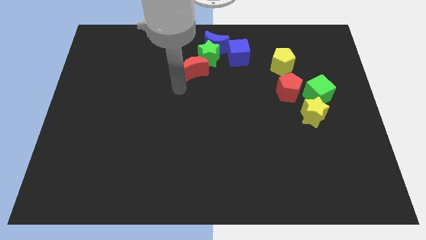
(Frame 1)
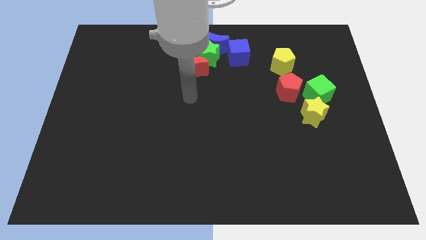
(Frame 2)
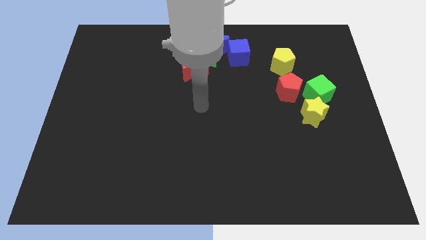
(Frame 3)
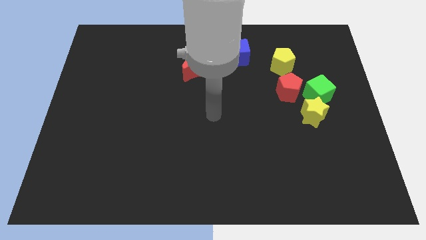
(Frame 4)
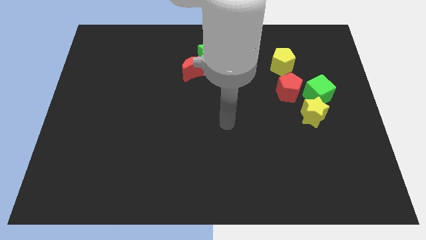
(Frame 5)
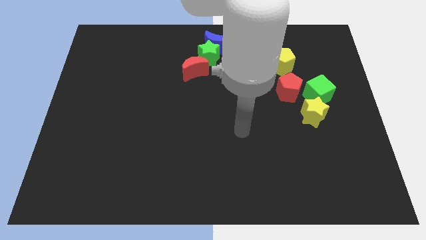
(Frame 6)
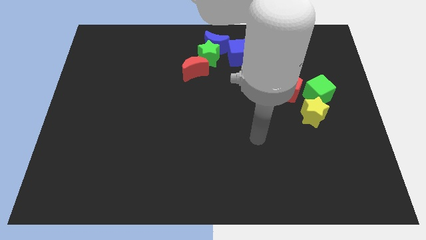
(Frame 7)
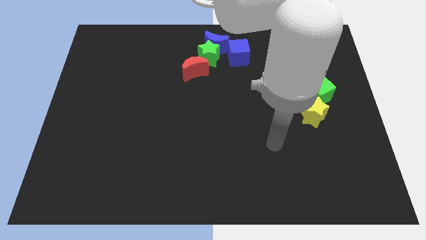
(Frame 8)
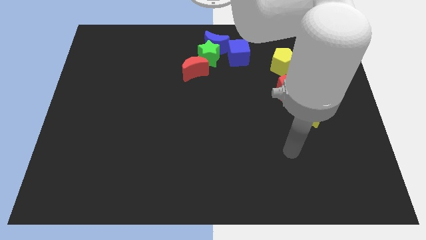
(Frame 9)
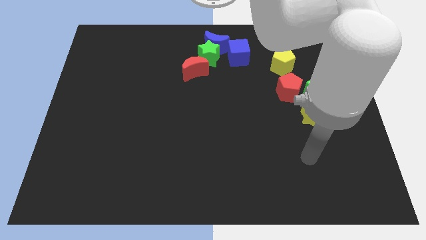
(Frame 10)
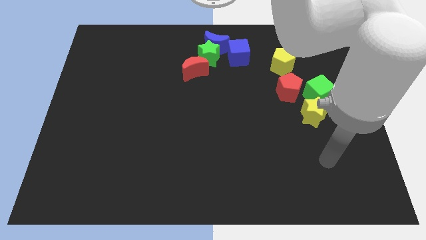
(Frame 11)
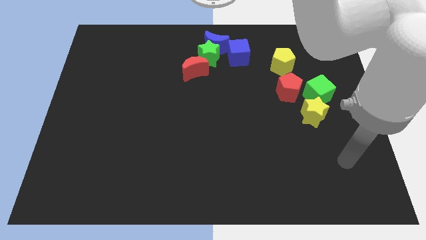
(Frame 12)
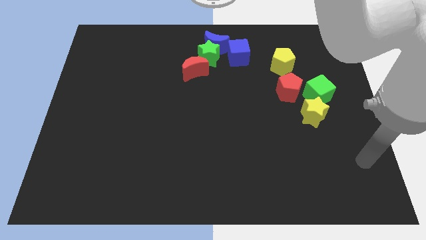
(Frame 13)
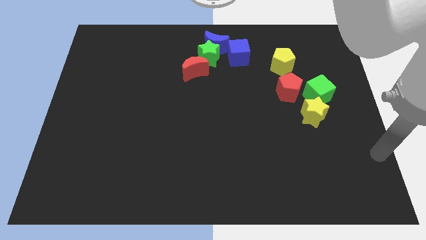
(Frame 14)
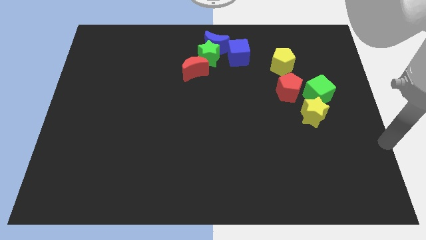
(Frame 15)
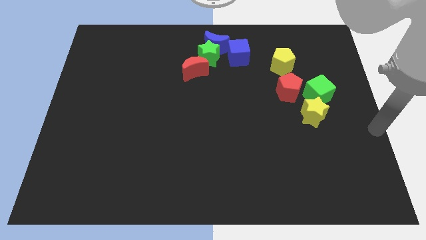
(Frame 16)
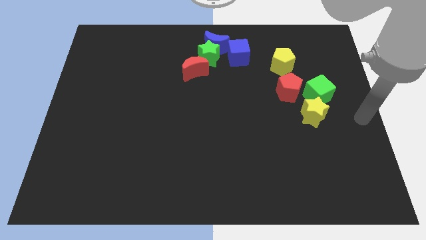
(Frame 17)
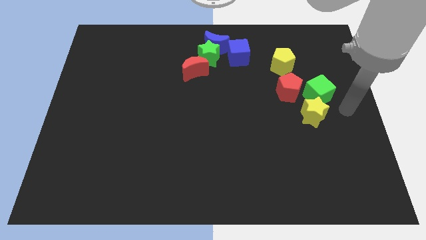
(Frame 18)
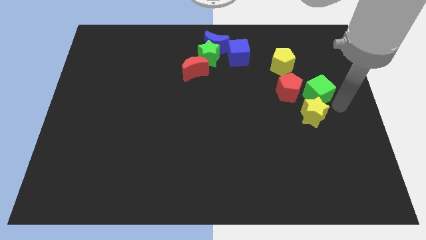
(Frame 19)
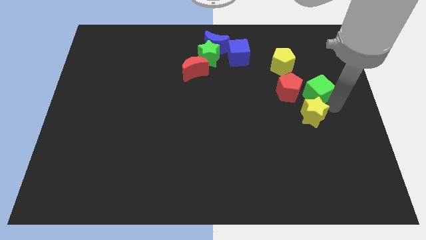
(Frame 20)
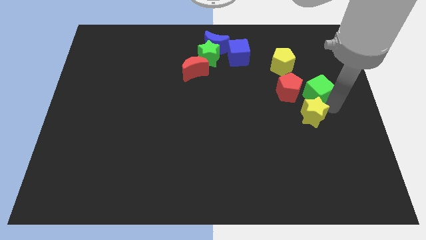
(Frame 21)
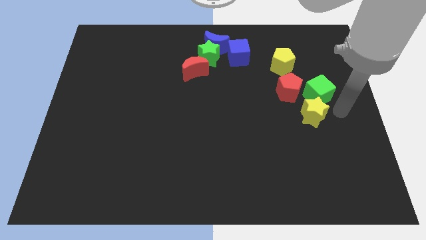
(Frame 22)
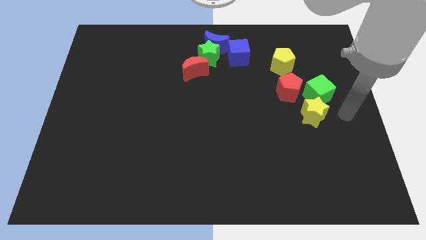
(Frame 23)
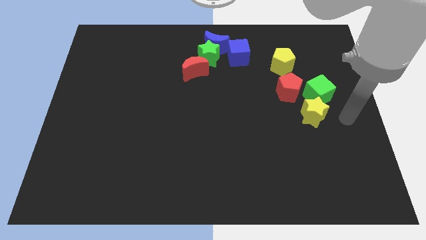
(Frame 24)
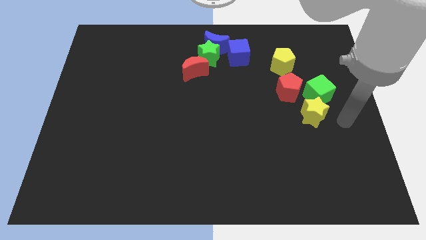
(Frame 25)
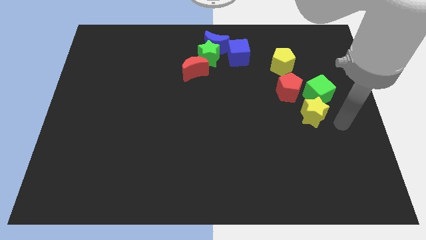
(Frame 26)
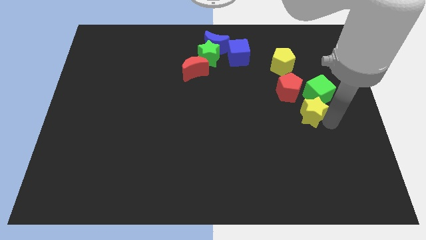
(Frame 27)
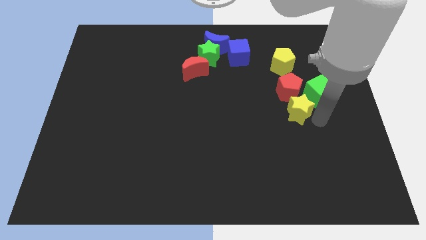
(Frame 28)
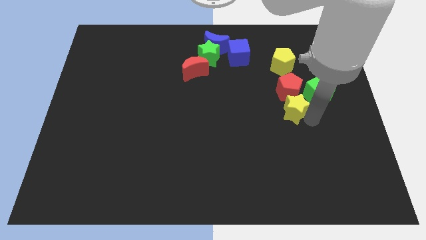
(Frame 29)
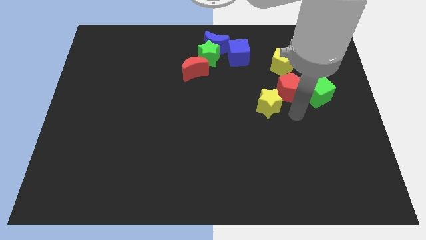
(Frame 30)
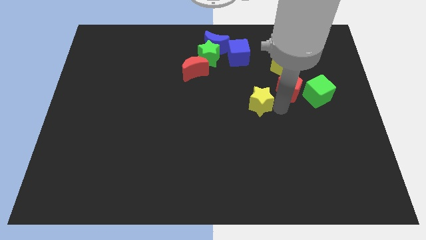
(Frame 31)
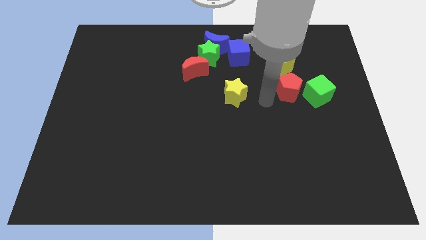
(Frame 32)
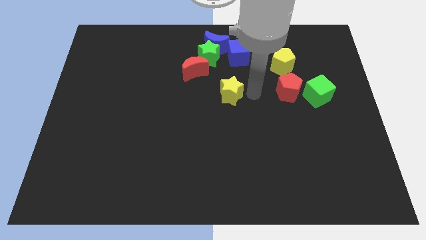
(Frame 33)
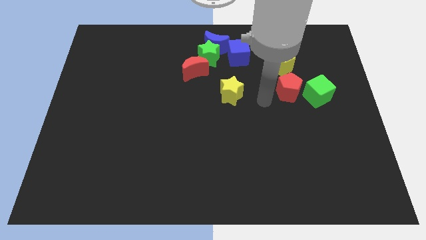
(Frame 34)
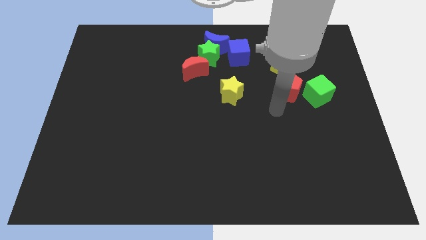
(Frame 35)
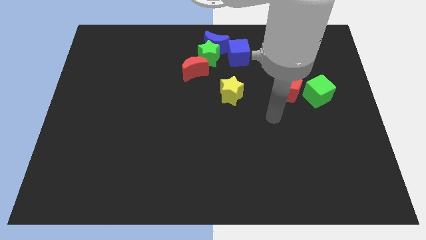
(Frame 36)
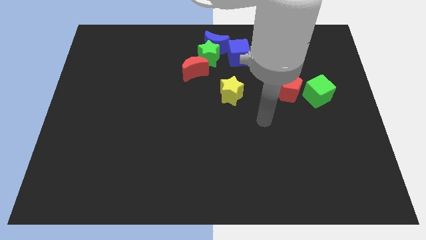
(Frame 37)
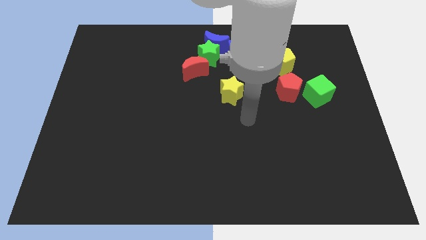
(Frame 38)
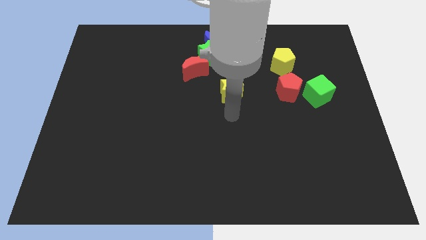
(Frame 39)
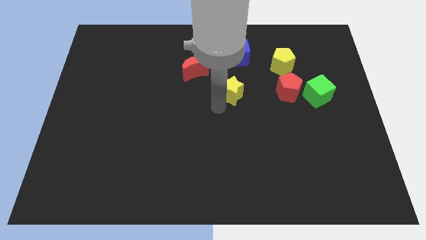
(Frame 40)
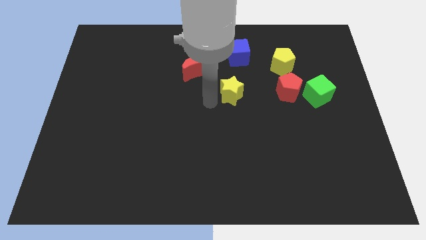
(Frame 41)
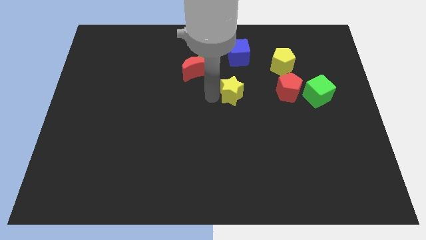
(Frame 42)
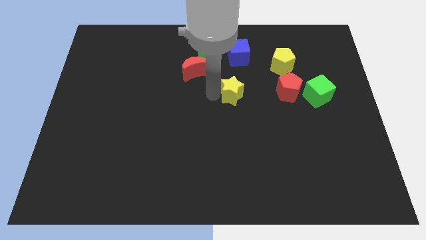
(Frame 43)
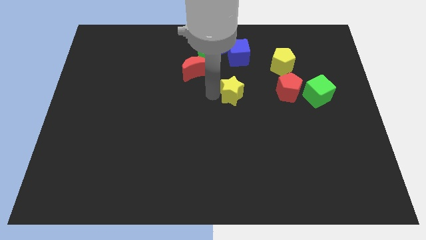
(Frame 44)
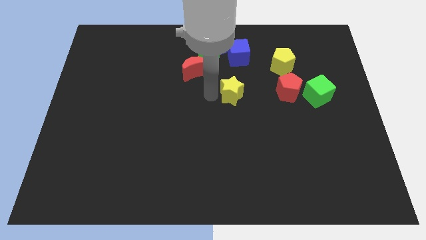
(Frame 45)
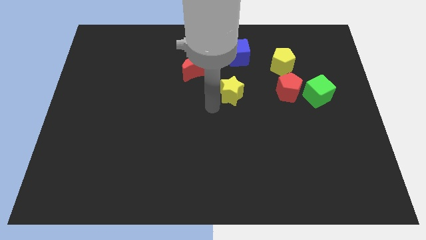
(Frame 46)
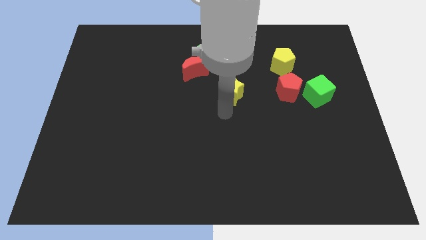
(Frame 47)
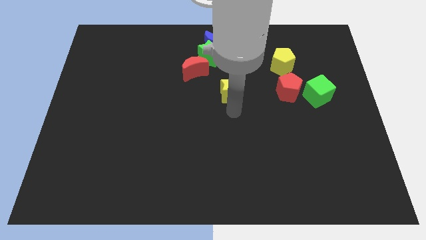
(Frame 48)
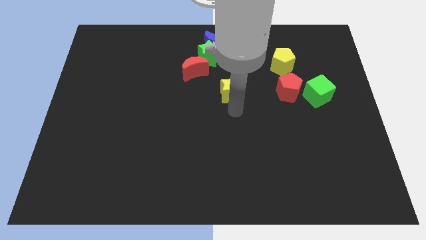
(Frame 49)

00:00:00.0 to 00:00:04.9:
separate the yellow star away from the green cube

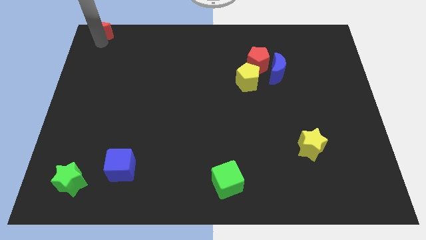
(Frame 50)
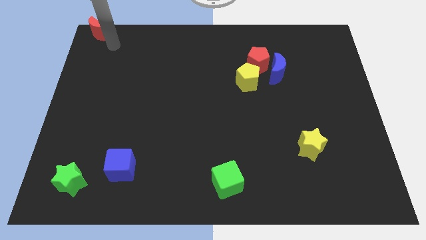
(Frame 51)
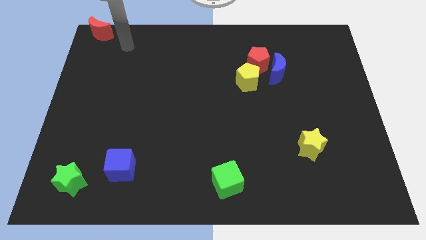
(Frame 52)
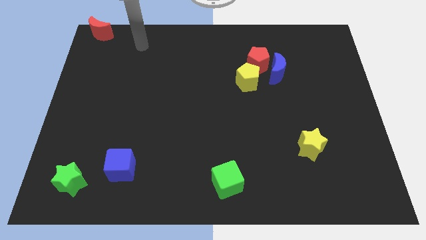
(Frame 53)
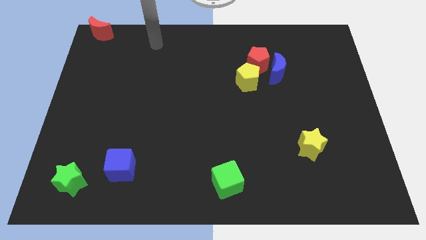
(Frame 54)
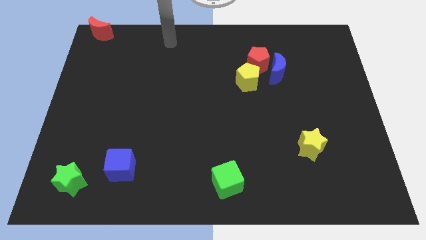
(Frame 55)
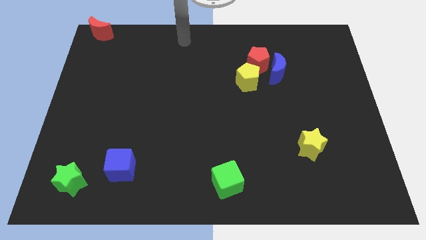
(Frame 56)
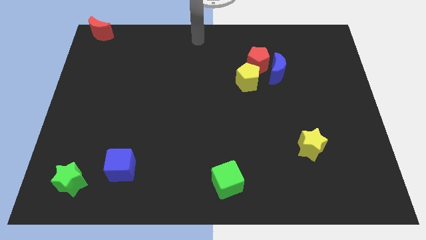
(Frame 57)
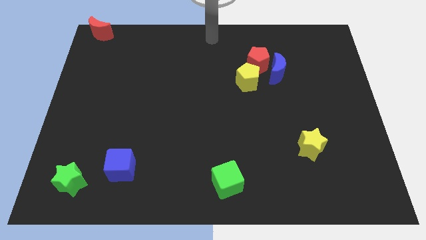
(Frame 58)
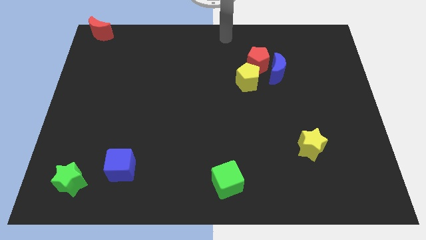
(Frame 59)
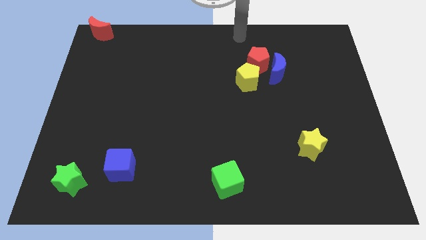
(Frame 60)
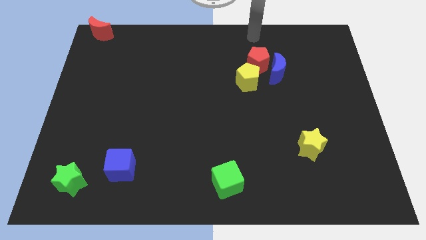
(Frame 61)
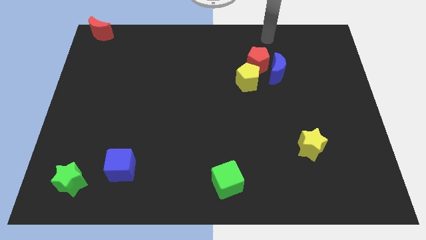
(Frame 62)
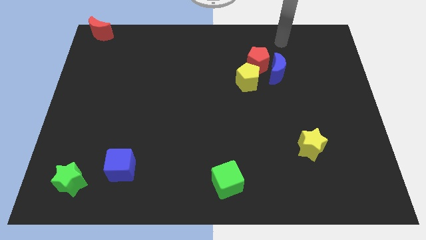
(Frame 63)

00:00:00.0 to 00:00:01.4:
move your arm away from the red moon

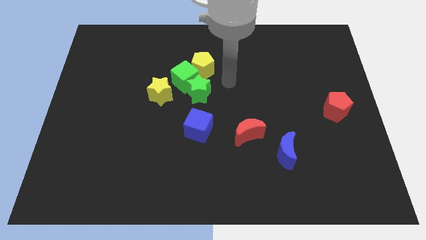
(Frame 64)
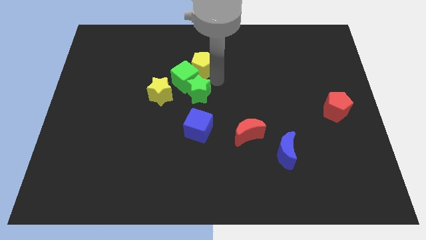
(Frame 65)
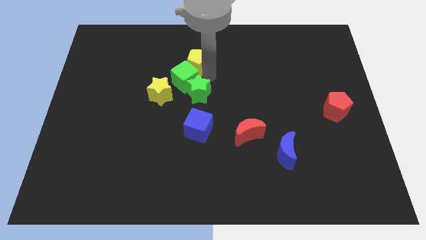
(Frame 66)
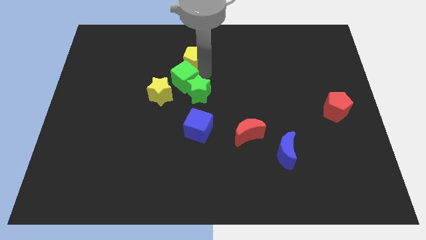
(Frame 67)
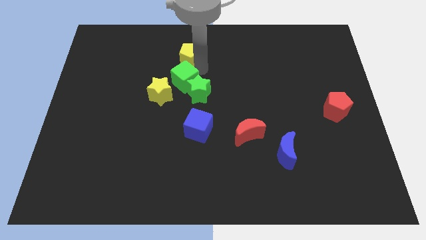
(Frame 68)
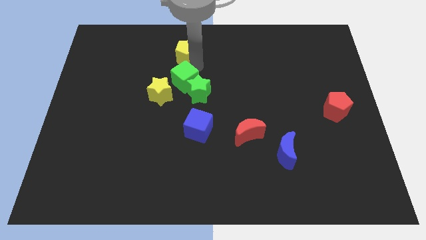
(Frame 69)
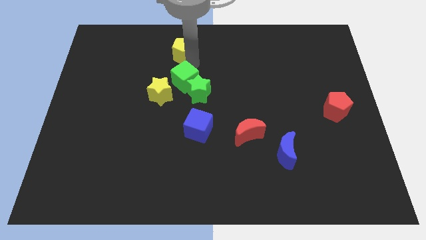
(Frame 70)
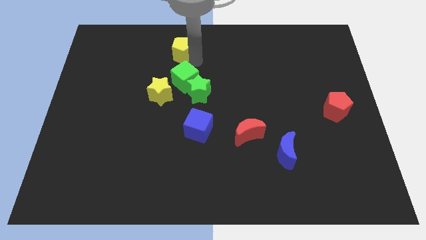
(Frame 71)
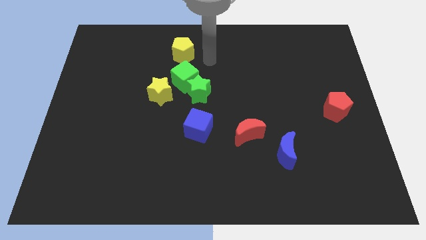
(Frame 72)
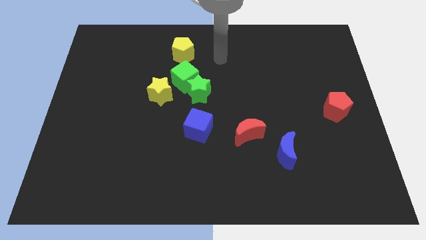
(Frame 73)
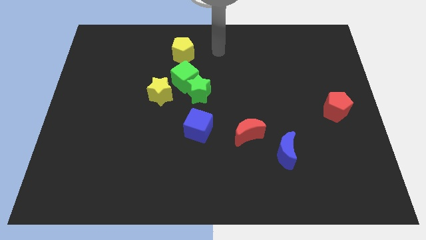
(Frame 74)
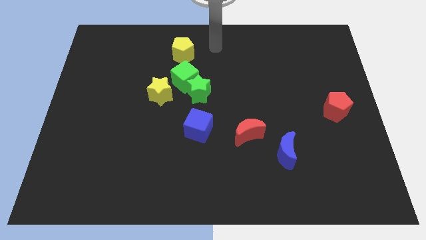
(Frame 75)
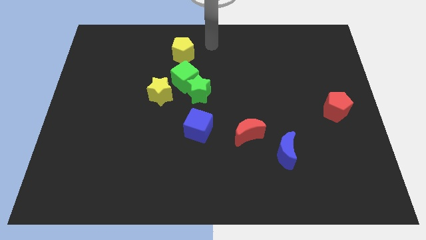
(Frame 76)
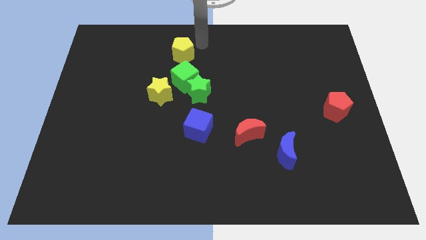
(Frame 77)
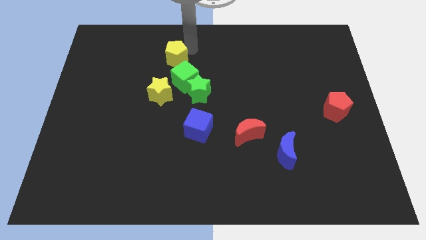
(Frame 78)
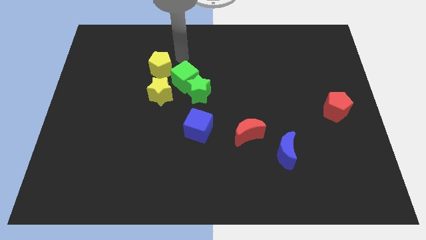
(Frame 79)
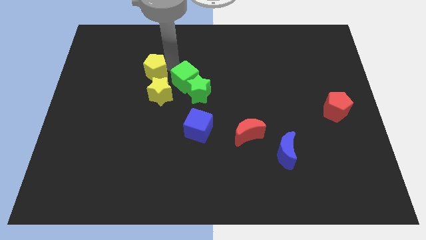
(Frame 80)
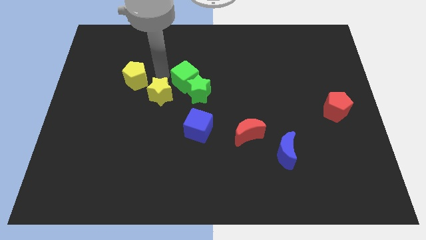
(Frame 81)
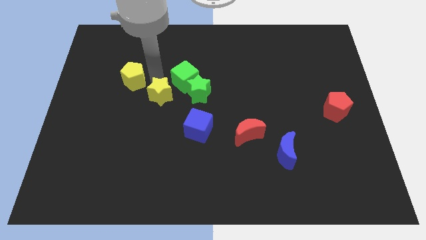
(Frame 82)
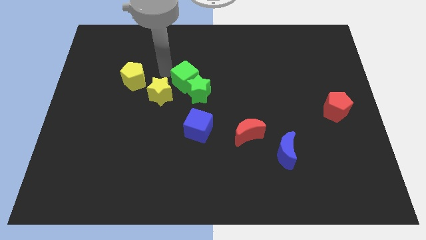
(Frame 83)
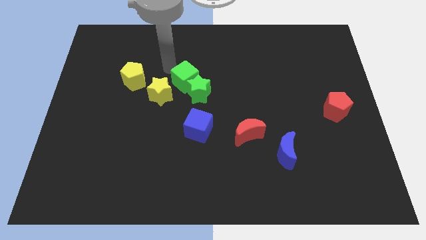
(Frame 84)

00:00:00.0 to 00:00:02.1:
push the yellow pentagon to the left of the yellow star

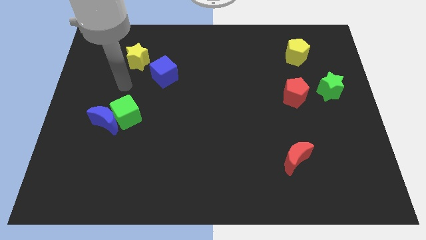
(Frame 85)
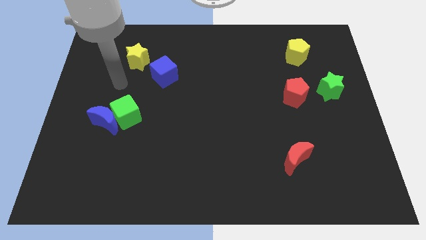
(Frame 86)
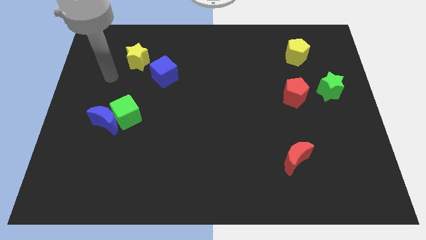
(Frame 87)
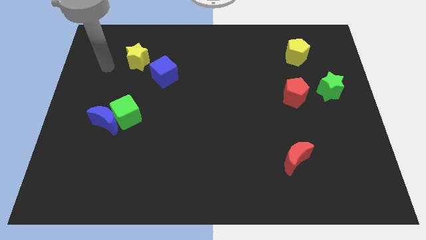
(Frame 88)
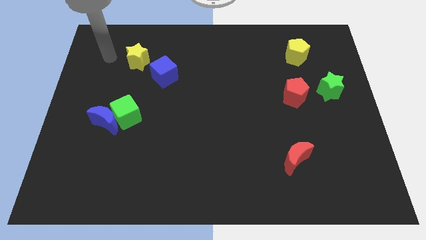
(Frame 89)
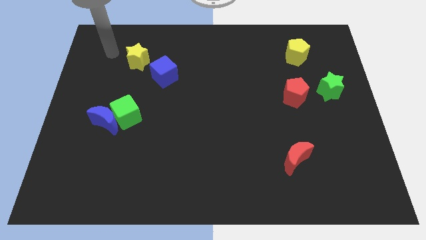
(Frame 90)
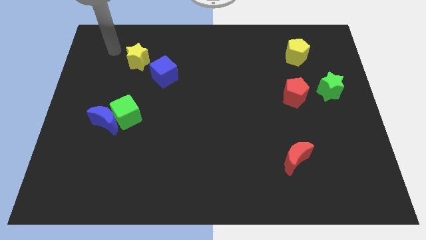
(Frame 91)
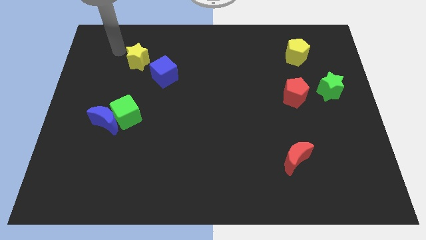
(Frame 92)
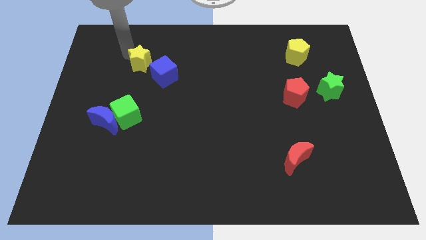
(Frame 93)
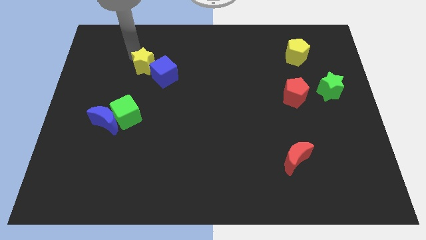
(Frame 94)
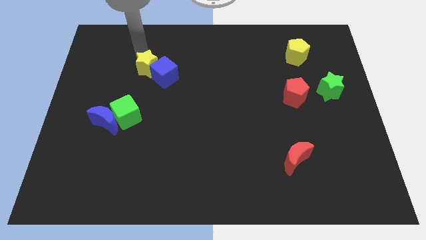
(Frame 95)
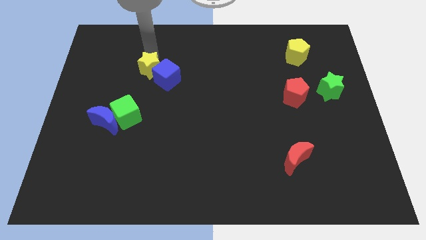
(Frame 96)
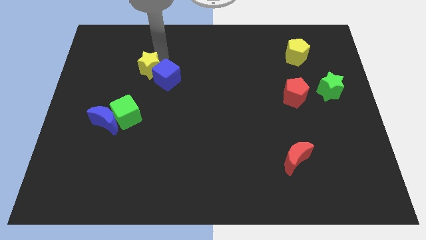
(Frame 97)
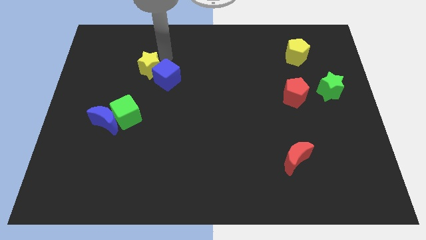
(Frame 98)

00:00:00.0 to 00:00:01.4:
push yellow star into the blue cube
